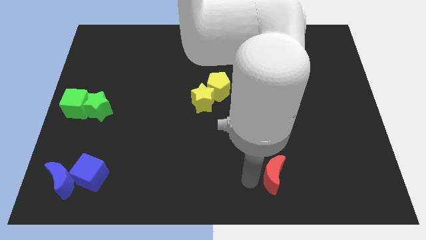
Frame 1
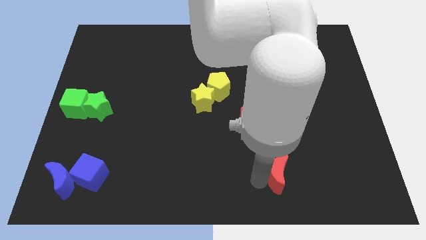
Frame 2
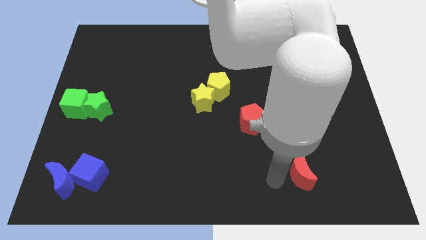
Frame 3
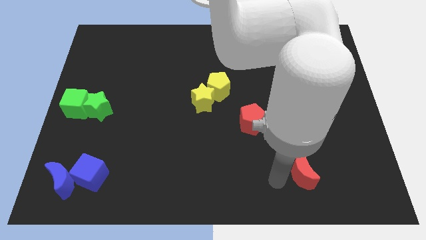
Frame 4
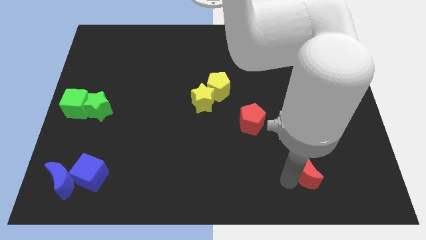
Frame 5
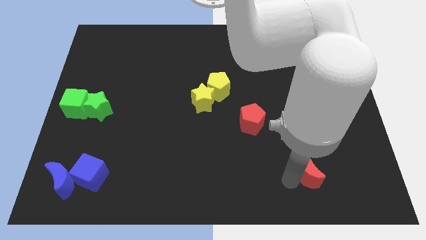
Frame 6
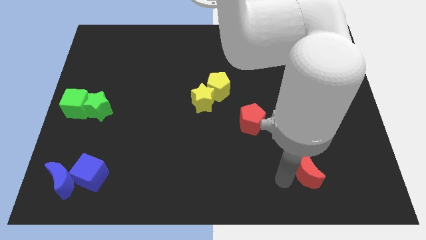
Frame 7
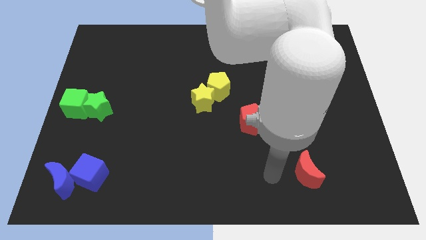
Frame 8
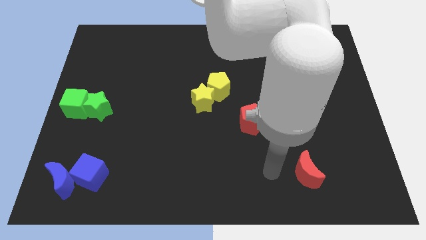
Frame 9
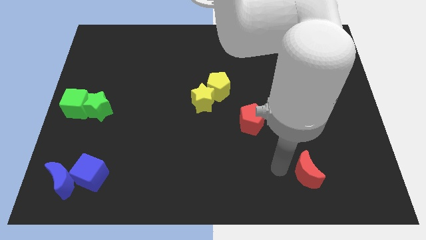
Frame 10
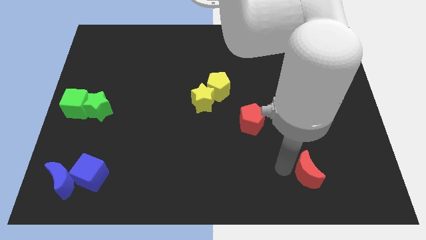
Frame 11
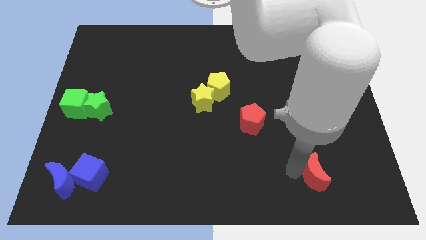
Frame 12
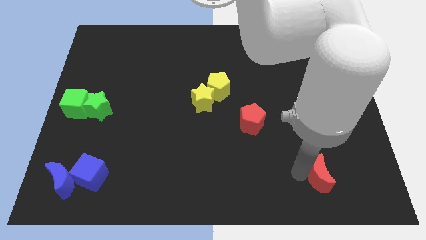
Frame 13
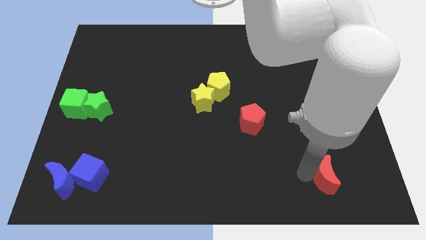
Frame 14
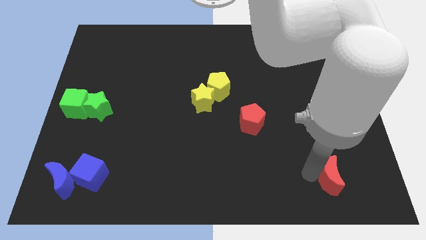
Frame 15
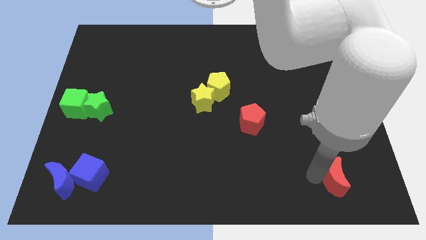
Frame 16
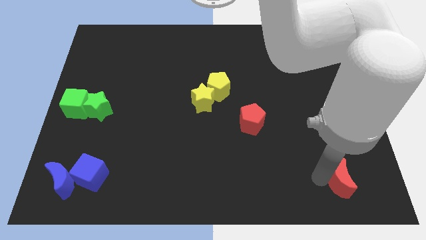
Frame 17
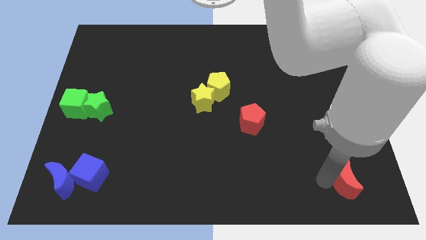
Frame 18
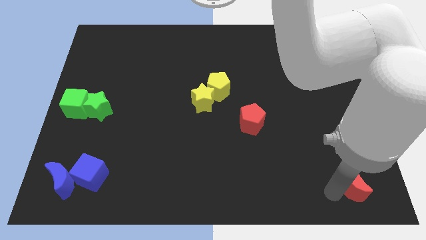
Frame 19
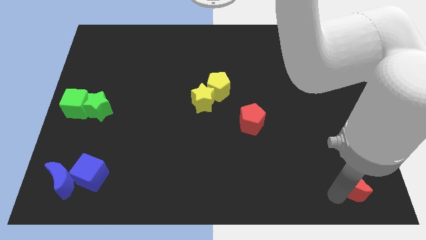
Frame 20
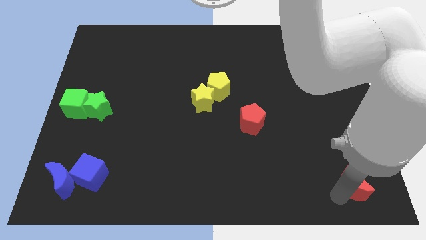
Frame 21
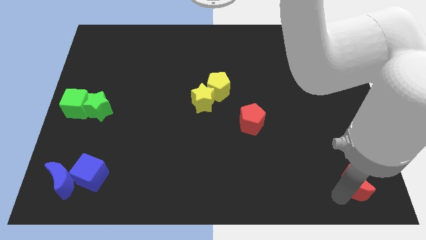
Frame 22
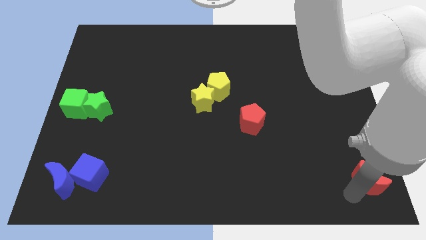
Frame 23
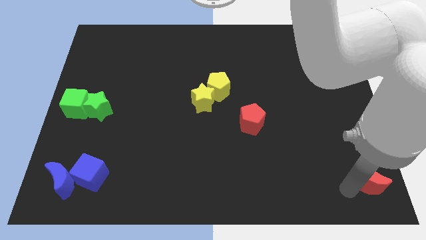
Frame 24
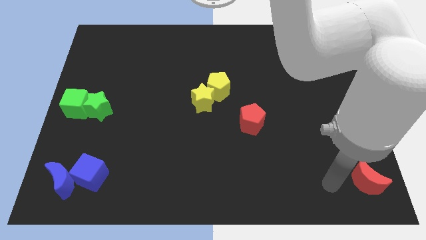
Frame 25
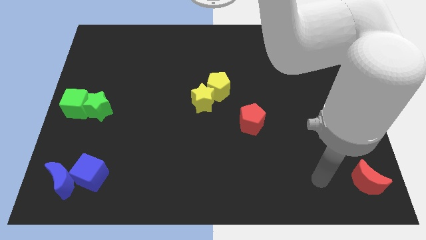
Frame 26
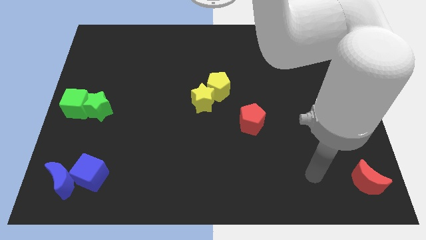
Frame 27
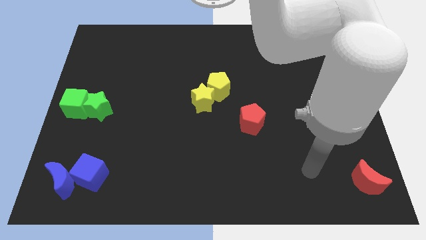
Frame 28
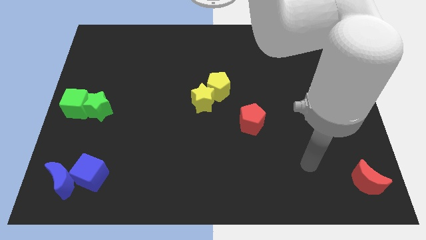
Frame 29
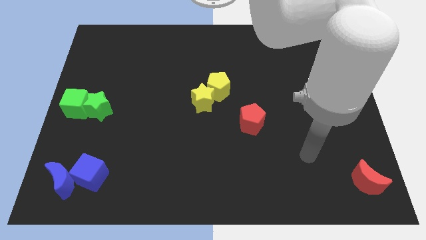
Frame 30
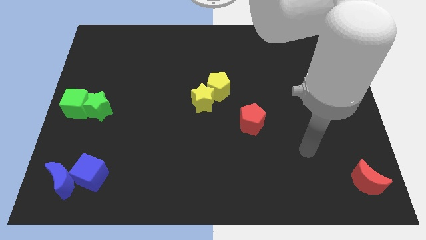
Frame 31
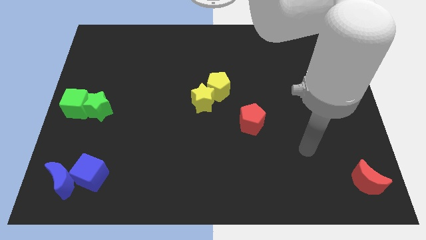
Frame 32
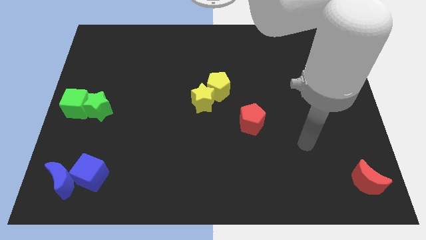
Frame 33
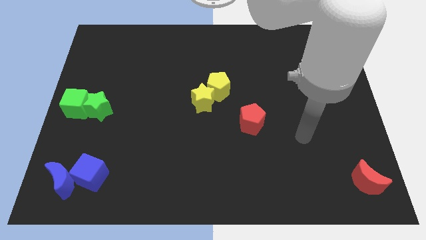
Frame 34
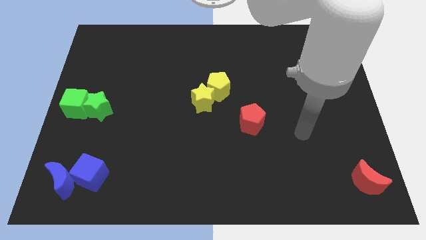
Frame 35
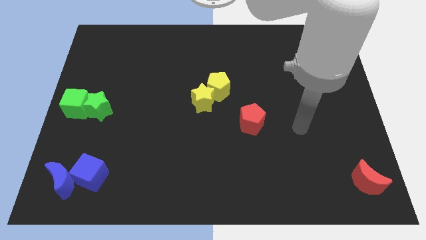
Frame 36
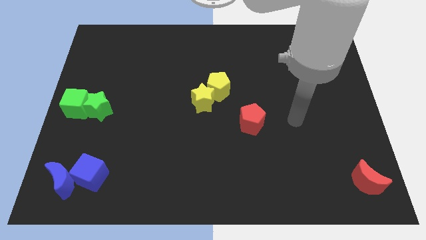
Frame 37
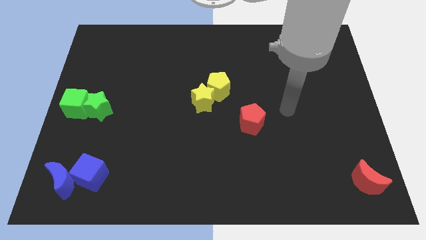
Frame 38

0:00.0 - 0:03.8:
place the red crescent at the bottom right corner of the board

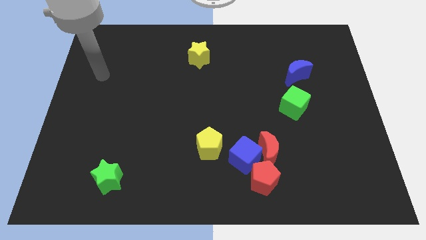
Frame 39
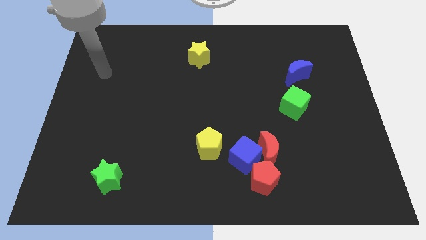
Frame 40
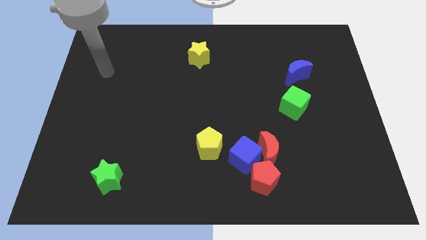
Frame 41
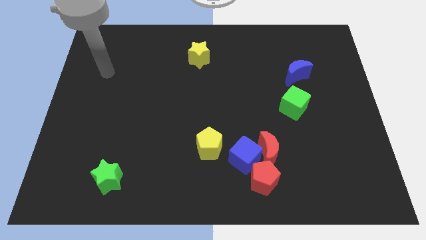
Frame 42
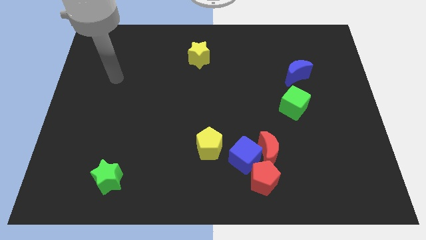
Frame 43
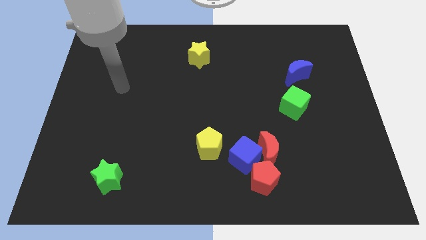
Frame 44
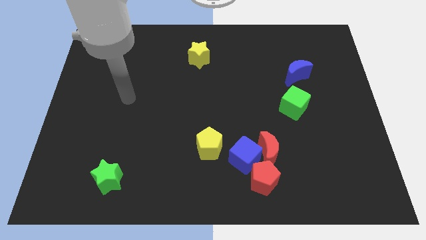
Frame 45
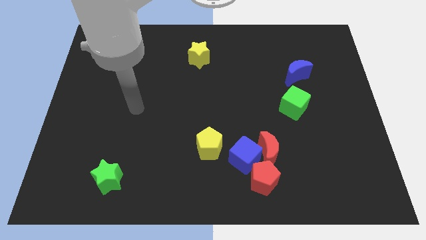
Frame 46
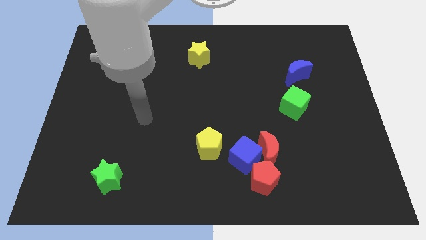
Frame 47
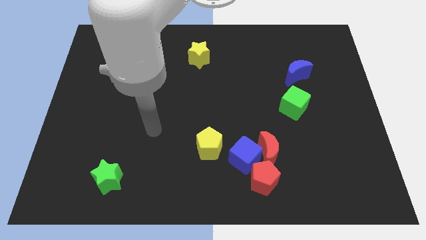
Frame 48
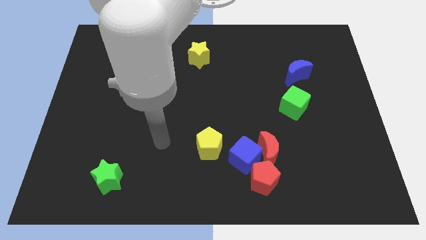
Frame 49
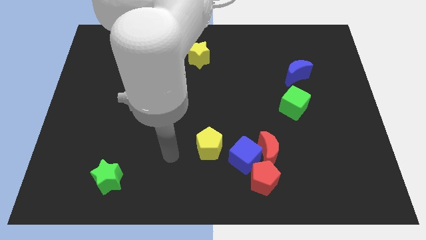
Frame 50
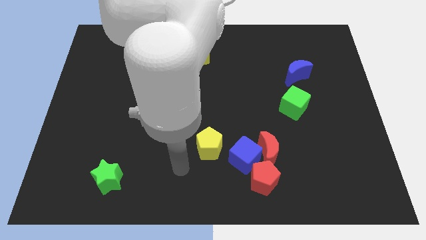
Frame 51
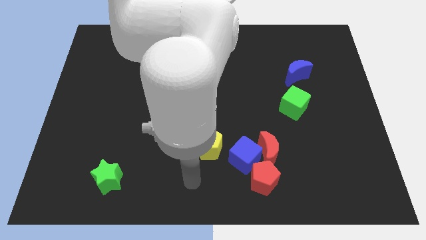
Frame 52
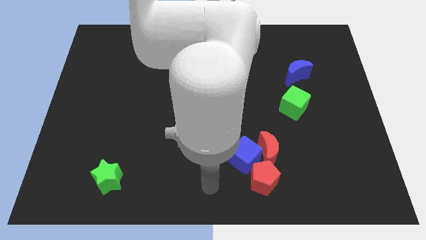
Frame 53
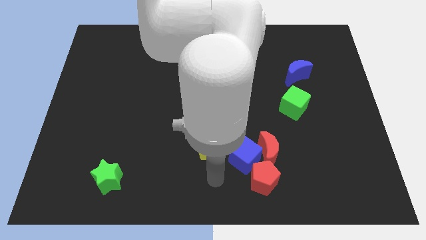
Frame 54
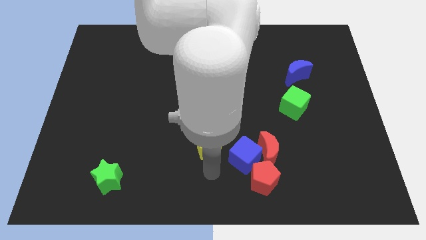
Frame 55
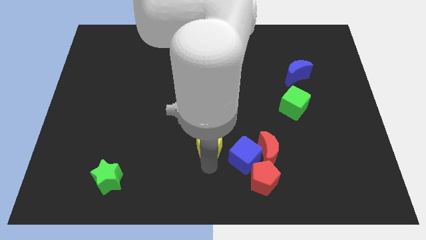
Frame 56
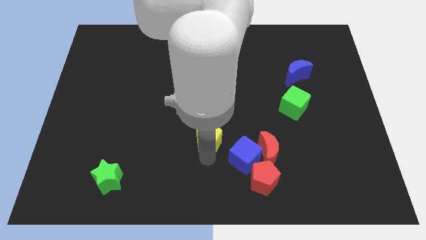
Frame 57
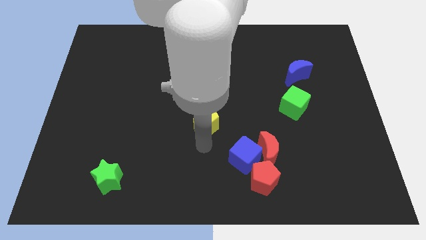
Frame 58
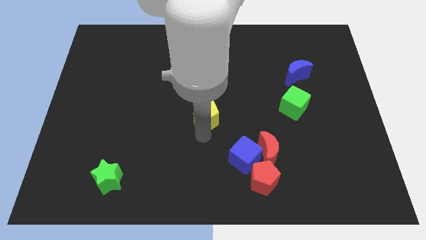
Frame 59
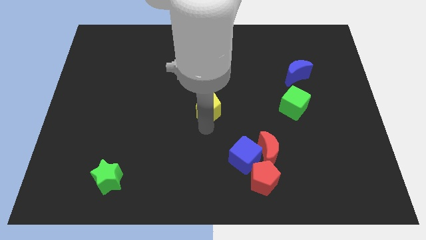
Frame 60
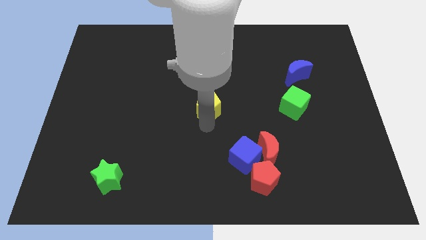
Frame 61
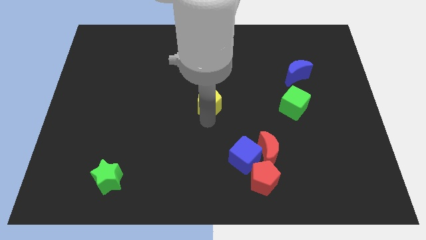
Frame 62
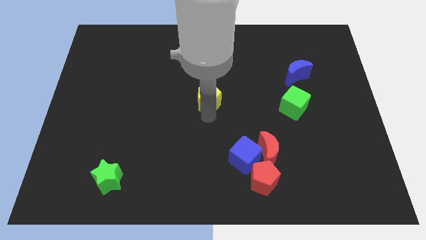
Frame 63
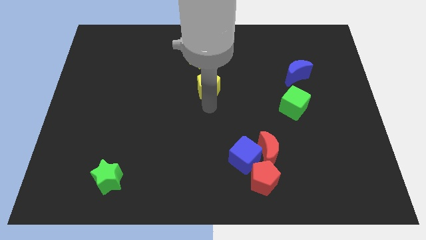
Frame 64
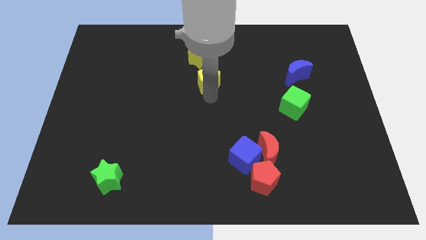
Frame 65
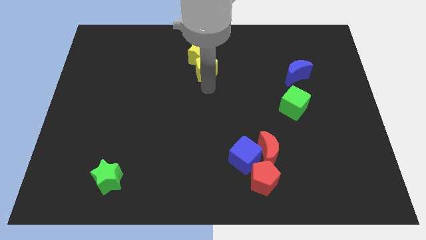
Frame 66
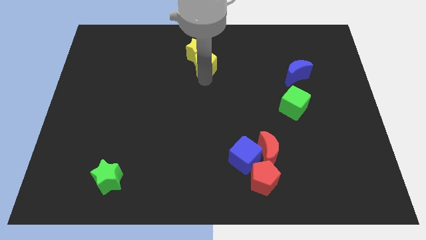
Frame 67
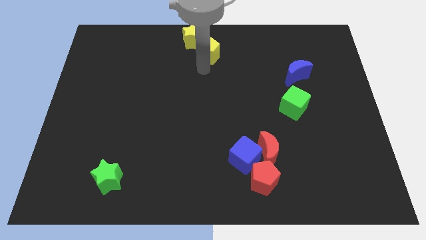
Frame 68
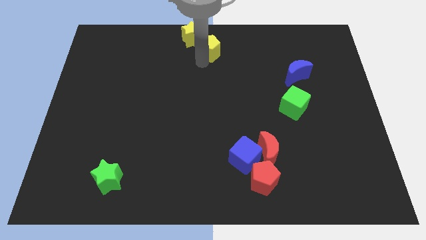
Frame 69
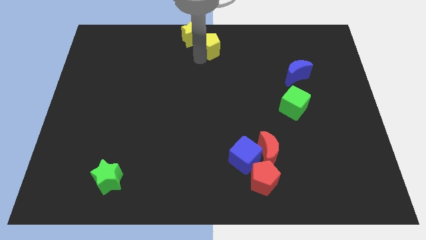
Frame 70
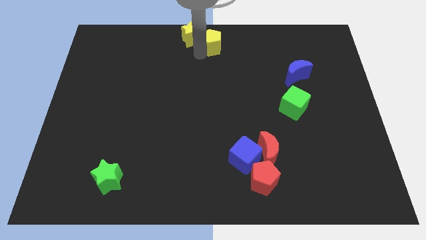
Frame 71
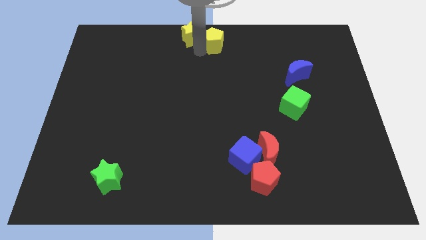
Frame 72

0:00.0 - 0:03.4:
push the yellow pentagon towards the top center

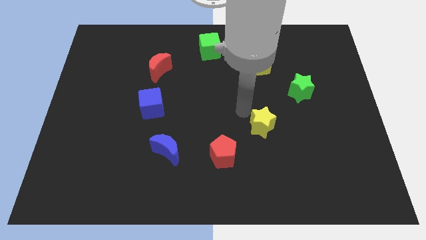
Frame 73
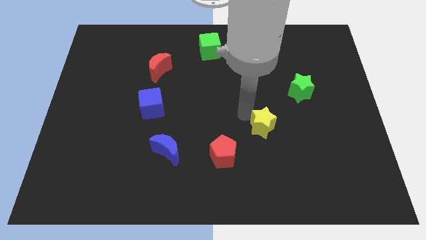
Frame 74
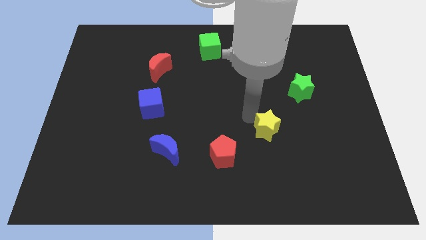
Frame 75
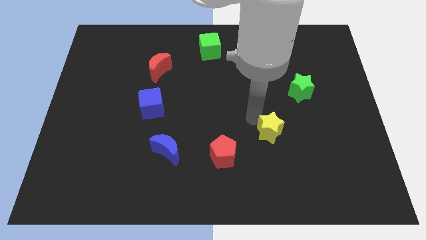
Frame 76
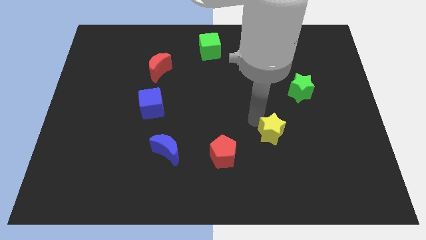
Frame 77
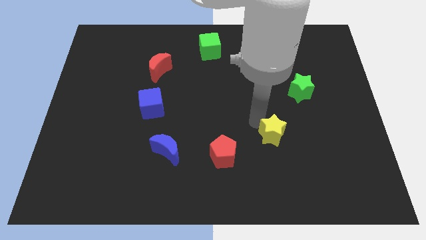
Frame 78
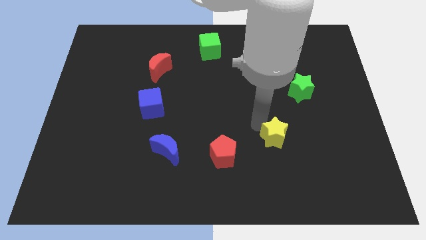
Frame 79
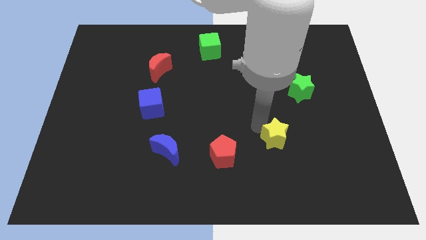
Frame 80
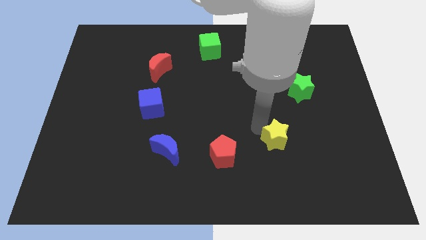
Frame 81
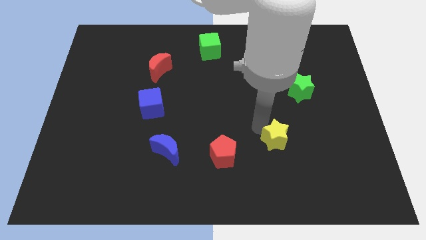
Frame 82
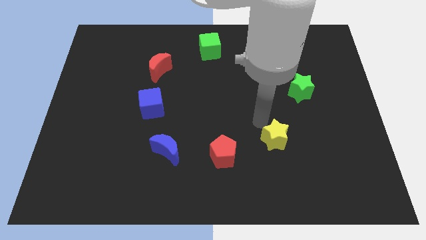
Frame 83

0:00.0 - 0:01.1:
move the yellow star to the bottom of the board

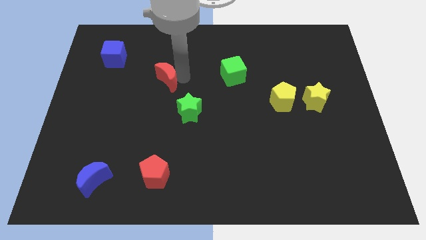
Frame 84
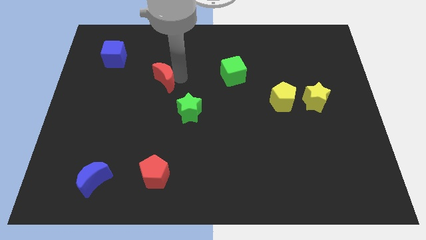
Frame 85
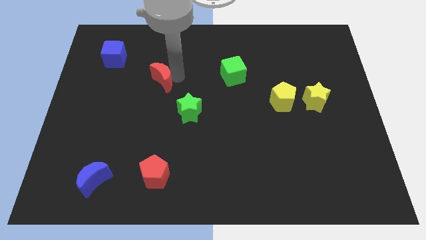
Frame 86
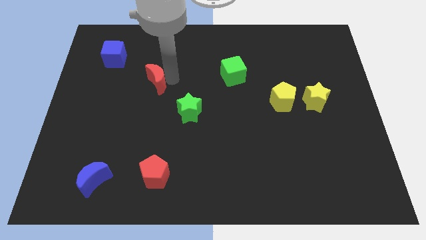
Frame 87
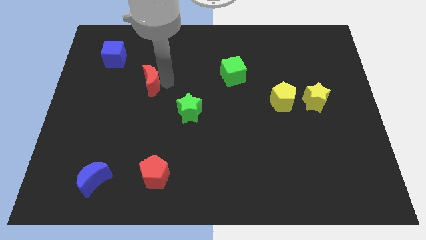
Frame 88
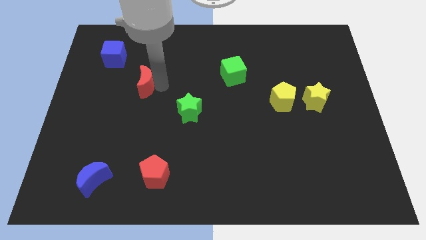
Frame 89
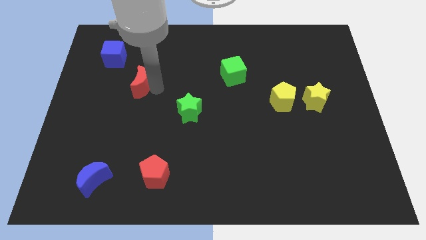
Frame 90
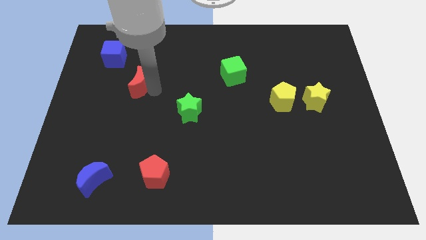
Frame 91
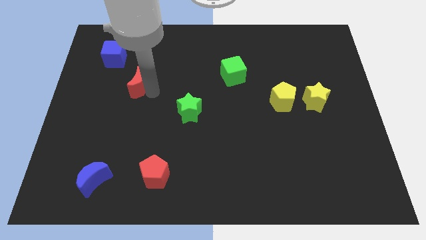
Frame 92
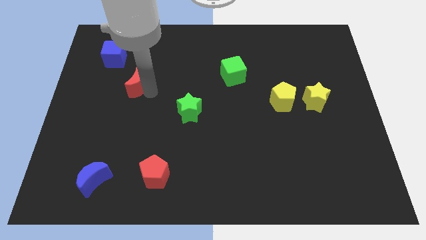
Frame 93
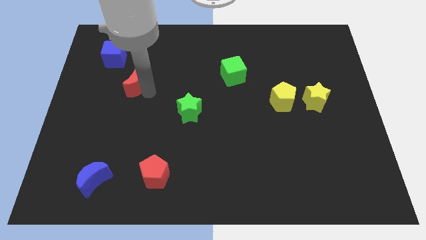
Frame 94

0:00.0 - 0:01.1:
move the red crescent to the left of the board
